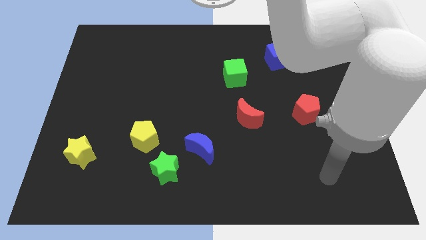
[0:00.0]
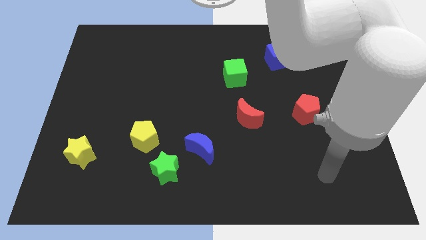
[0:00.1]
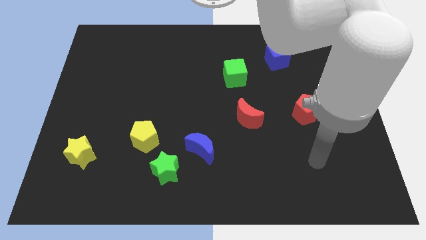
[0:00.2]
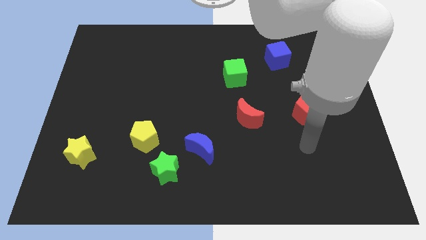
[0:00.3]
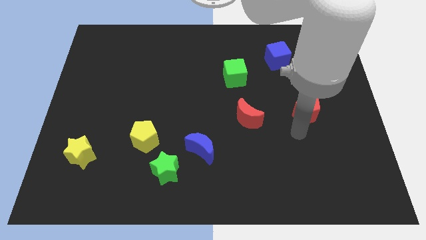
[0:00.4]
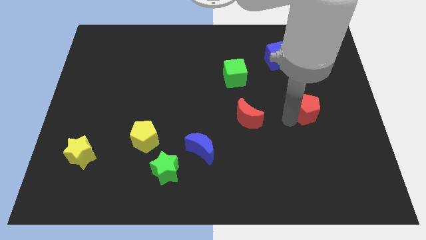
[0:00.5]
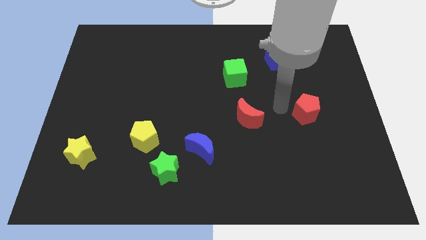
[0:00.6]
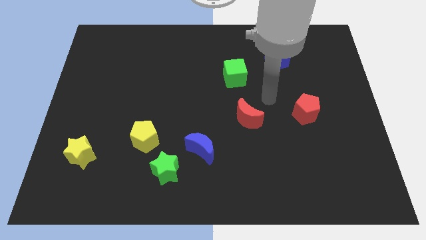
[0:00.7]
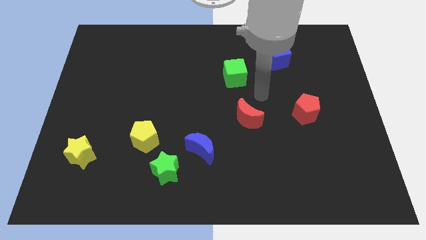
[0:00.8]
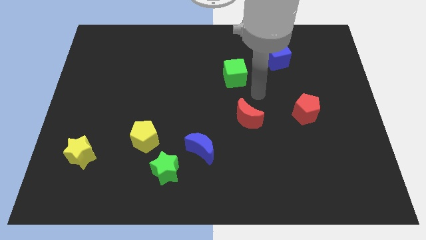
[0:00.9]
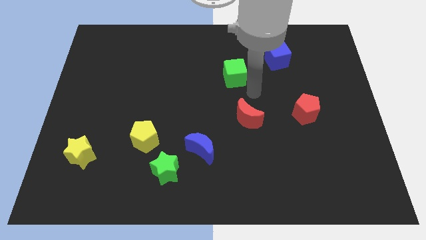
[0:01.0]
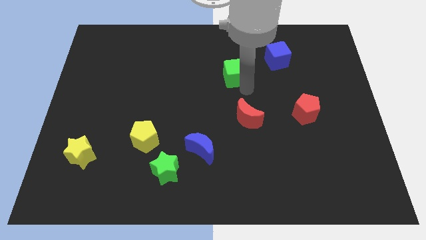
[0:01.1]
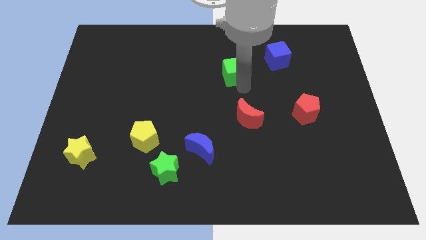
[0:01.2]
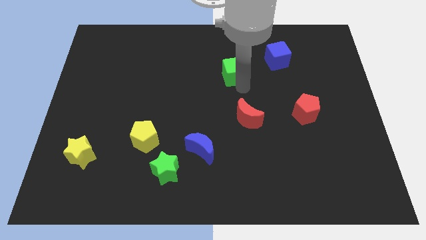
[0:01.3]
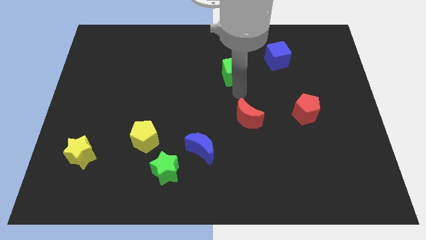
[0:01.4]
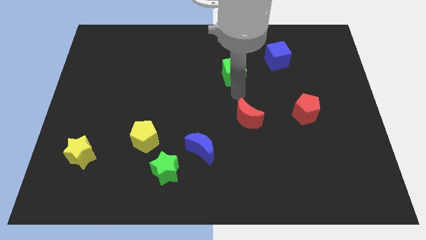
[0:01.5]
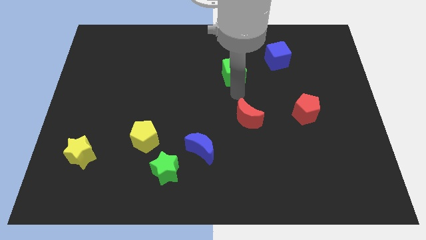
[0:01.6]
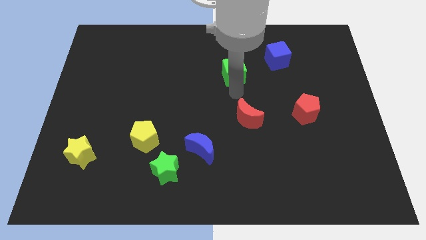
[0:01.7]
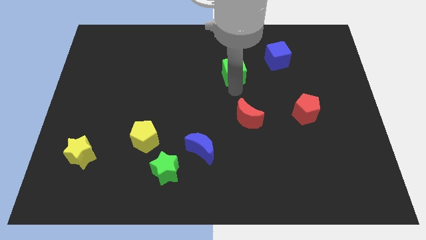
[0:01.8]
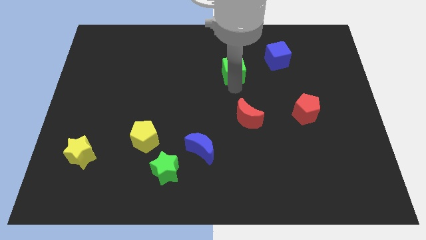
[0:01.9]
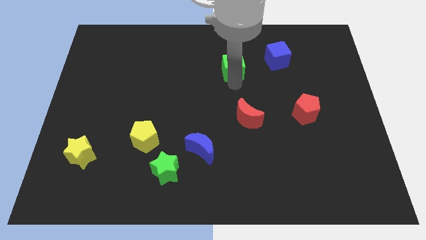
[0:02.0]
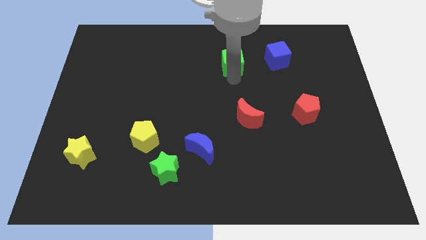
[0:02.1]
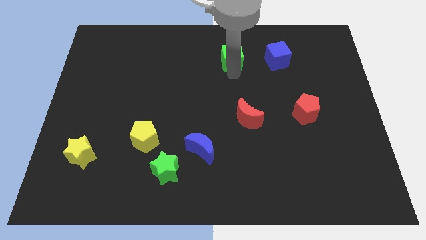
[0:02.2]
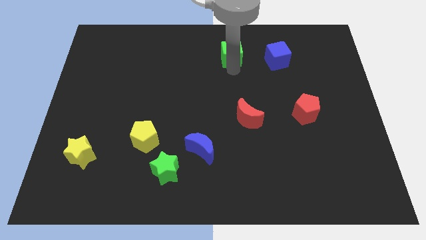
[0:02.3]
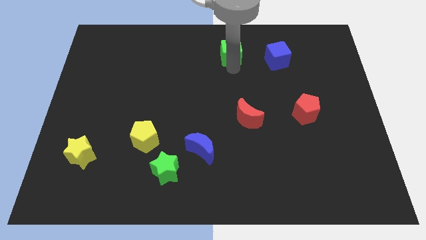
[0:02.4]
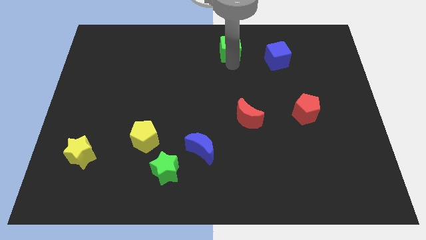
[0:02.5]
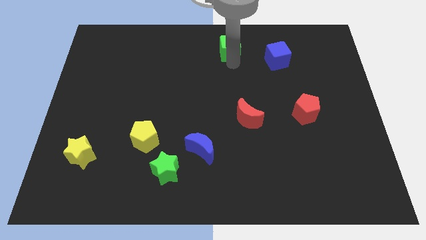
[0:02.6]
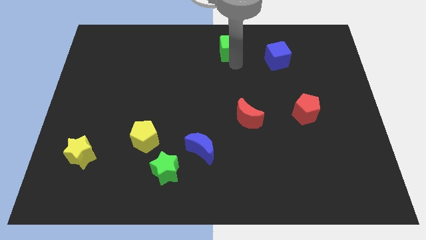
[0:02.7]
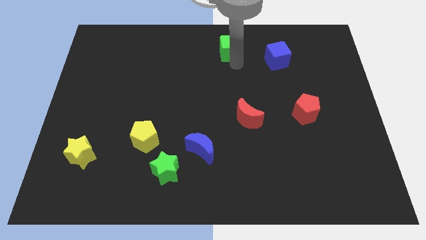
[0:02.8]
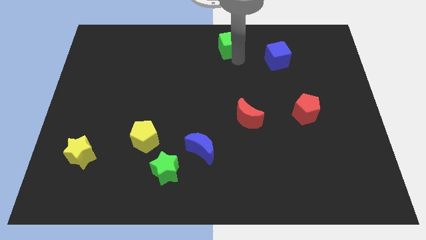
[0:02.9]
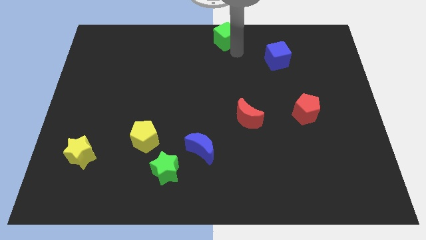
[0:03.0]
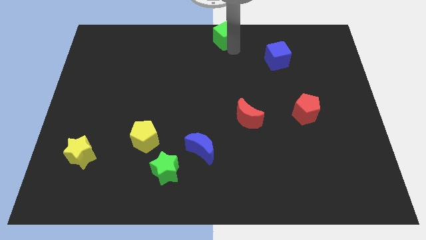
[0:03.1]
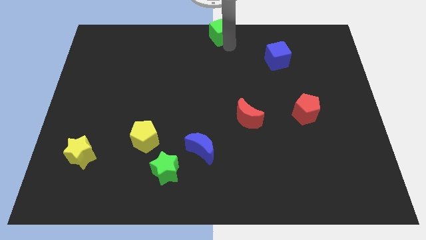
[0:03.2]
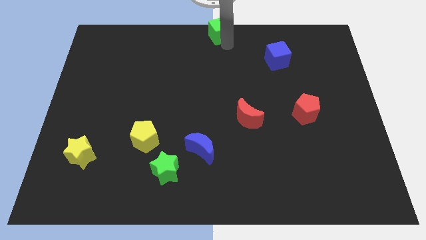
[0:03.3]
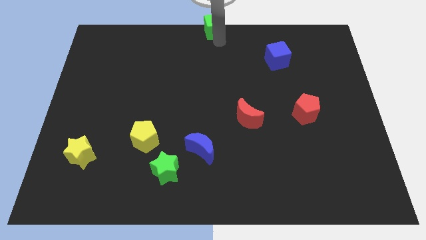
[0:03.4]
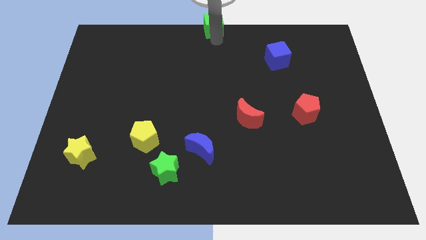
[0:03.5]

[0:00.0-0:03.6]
place green cube on top center of the board

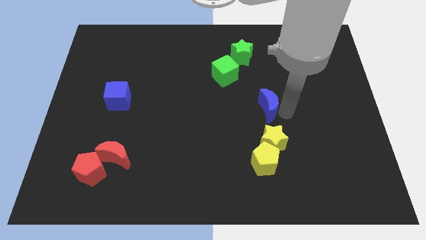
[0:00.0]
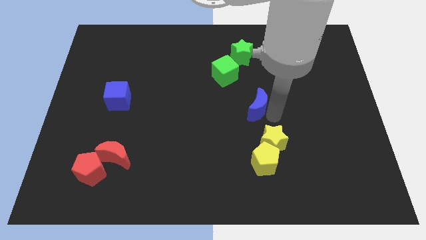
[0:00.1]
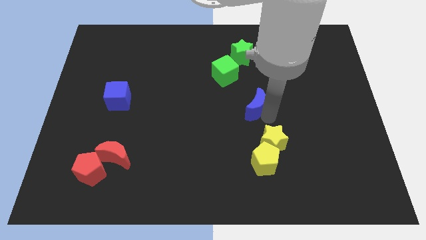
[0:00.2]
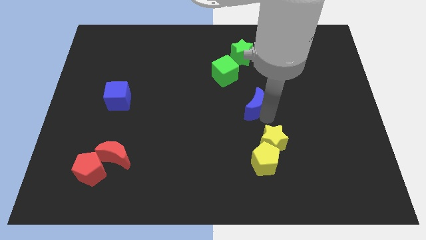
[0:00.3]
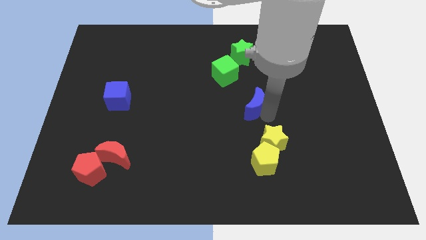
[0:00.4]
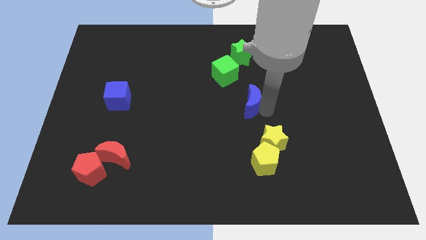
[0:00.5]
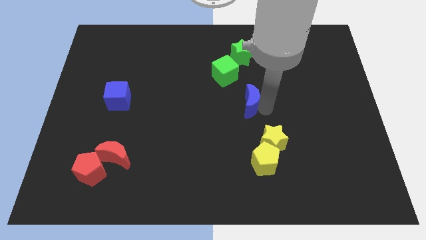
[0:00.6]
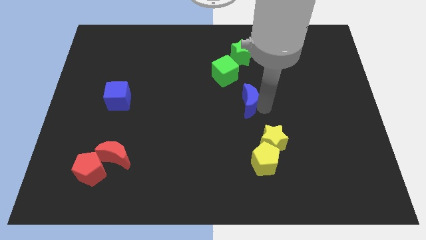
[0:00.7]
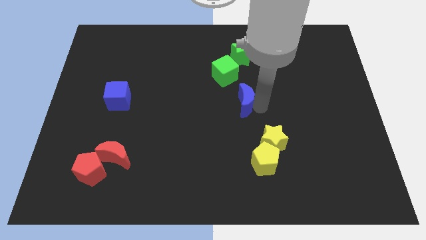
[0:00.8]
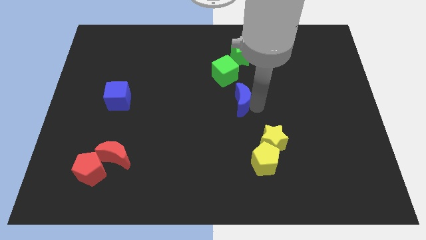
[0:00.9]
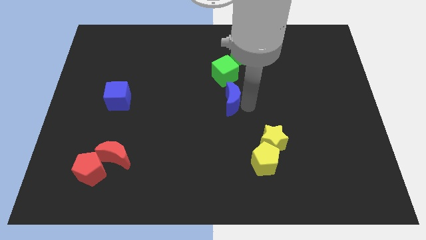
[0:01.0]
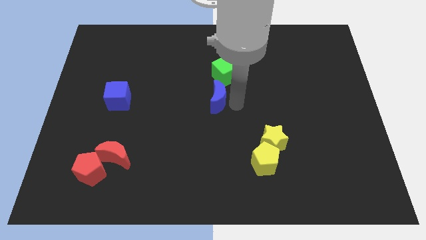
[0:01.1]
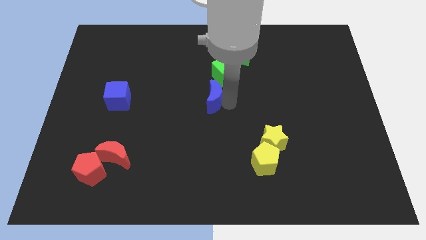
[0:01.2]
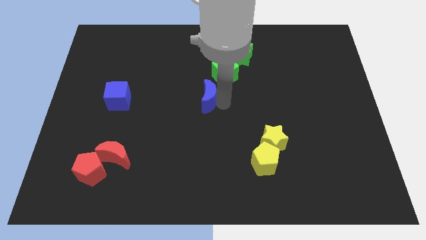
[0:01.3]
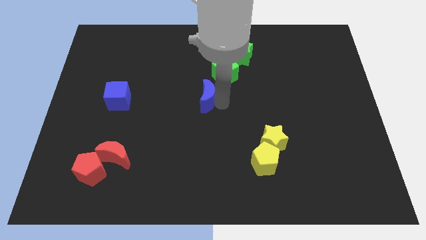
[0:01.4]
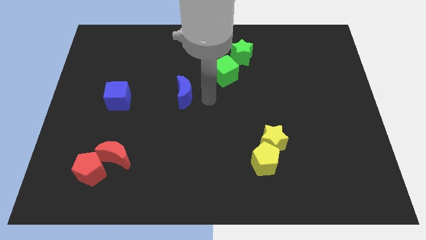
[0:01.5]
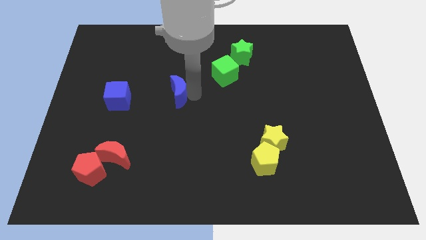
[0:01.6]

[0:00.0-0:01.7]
drag the blue moon towards the blue cube

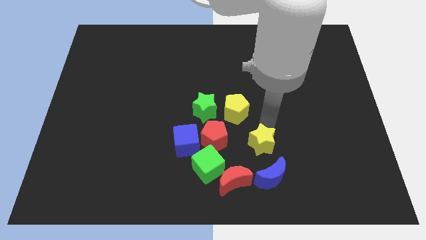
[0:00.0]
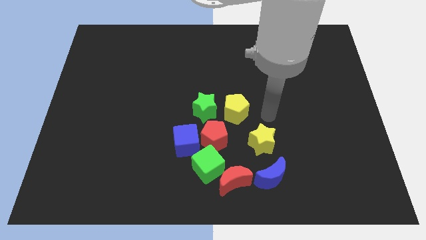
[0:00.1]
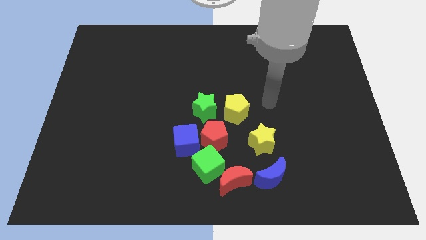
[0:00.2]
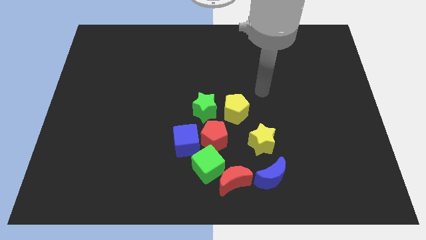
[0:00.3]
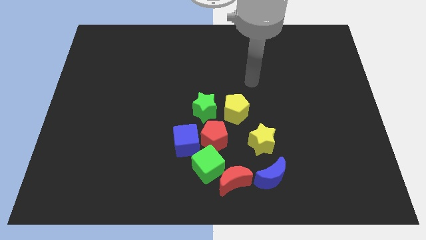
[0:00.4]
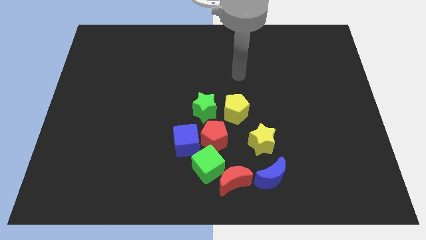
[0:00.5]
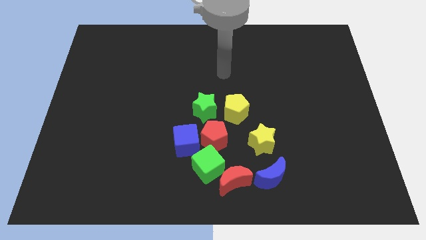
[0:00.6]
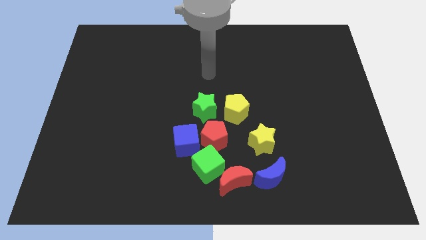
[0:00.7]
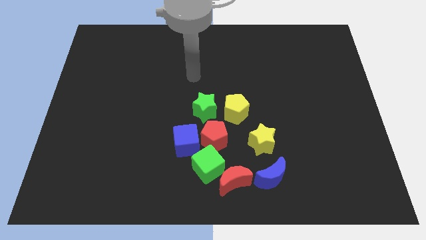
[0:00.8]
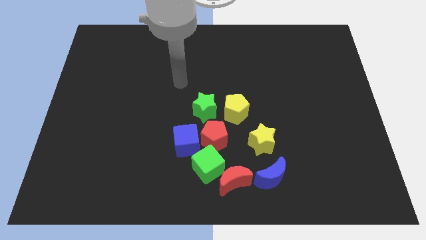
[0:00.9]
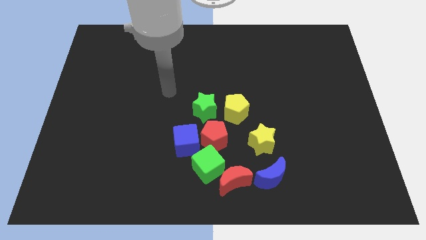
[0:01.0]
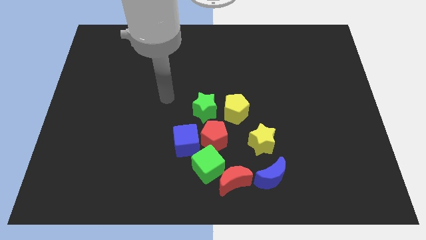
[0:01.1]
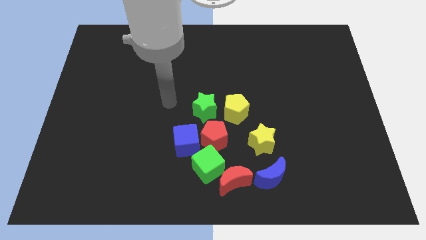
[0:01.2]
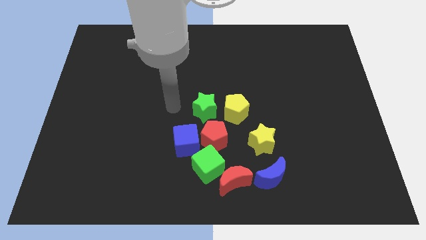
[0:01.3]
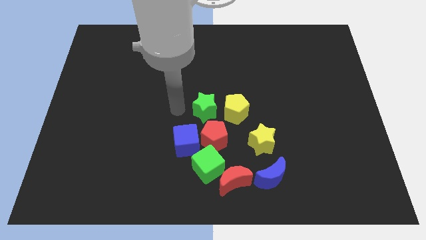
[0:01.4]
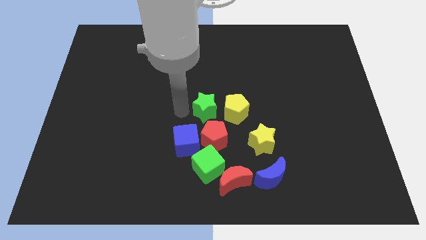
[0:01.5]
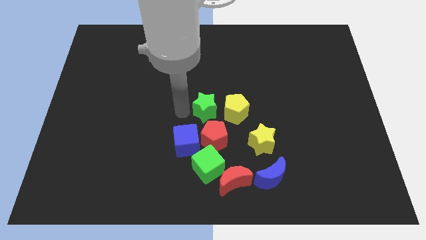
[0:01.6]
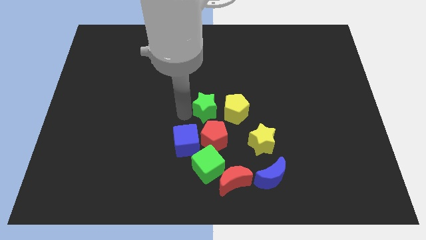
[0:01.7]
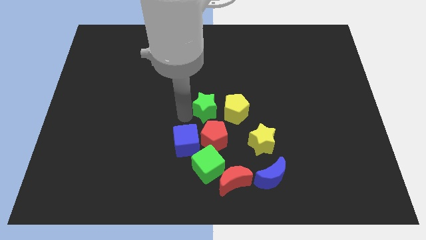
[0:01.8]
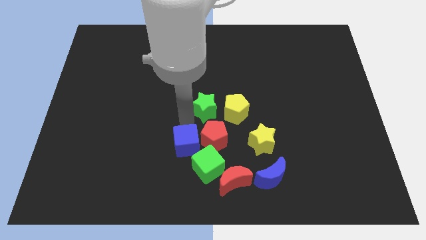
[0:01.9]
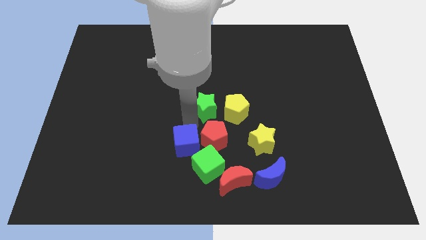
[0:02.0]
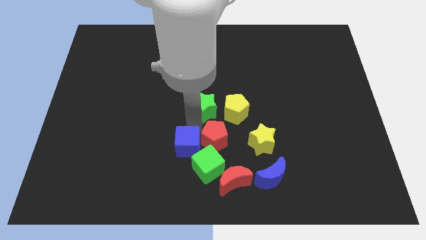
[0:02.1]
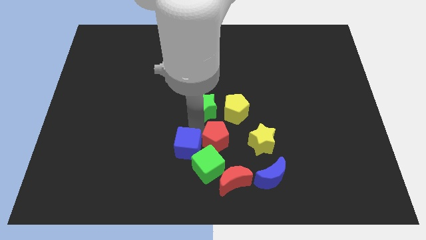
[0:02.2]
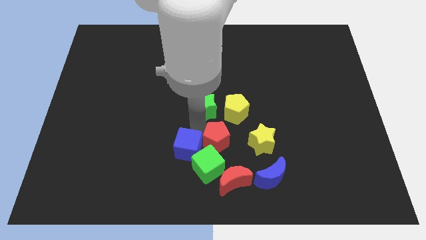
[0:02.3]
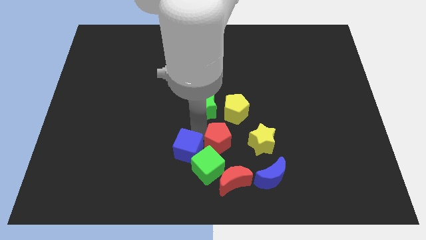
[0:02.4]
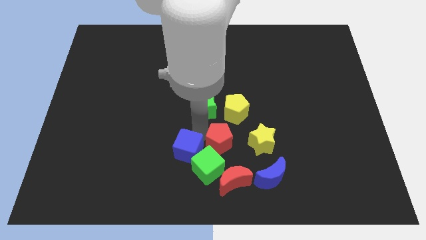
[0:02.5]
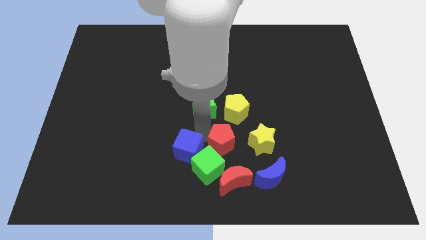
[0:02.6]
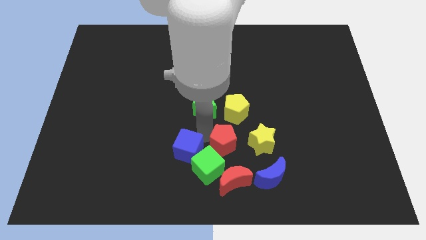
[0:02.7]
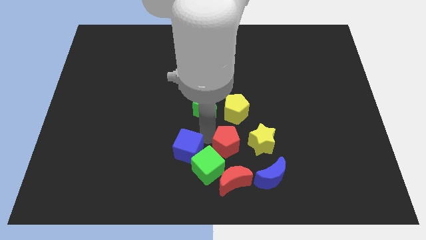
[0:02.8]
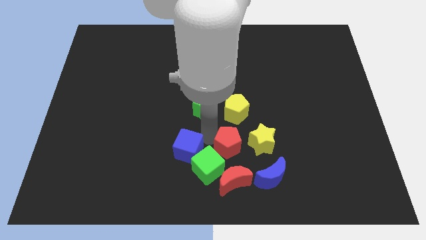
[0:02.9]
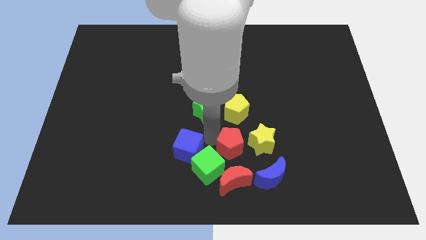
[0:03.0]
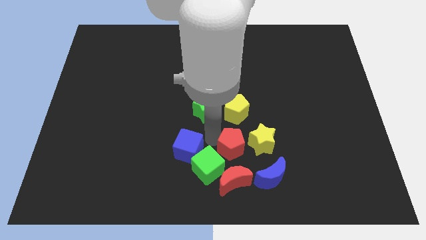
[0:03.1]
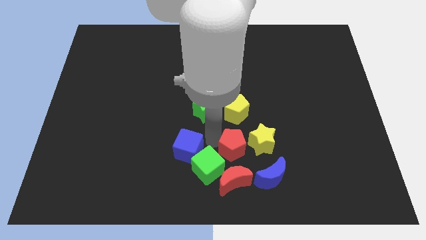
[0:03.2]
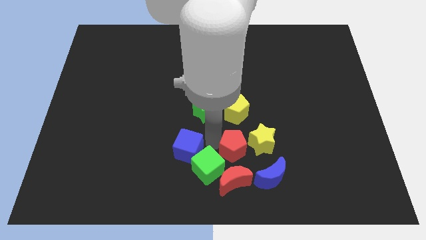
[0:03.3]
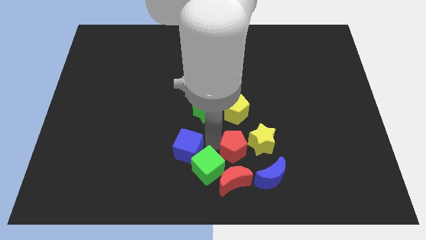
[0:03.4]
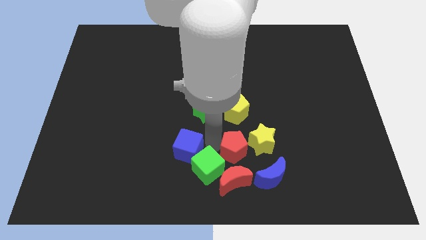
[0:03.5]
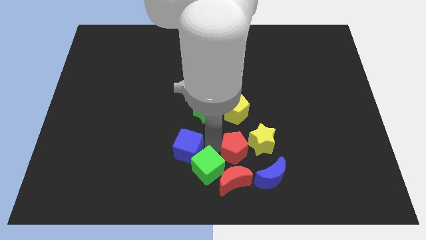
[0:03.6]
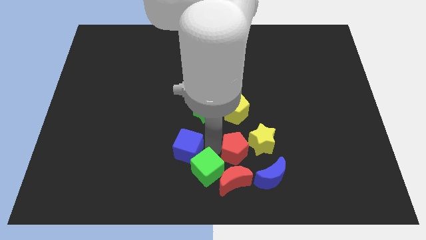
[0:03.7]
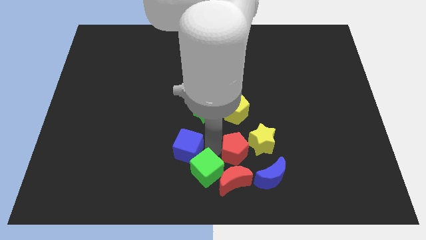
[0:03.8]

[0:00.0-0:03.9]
move the red pentagon close to the left side of the yellow star
